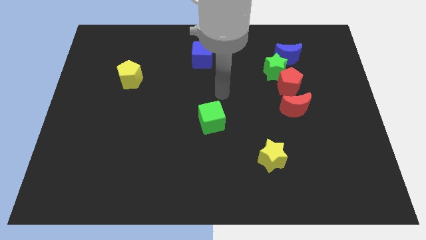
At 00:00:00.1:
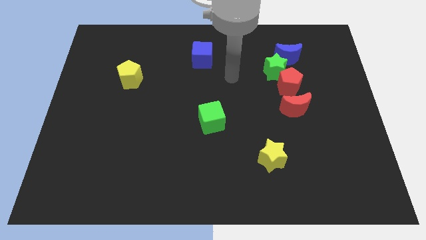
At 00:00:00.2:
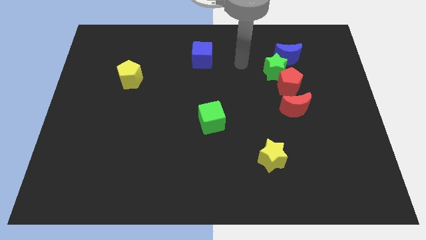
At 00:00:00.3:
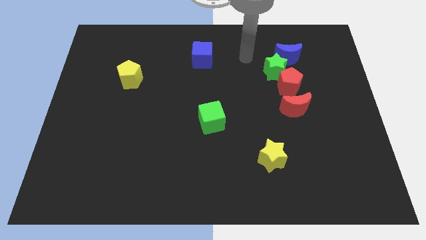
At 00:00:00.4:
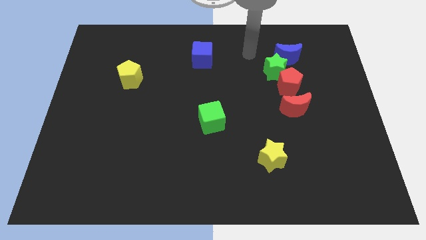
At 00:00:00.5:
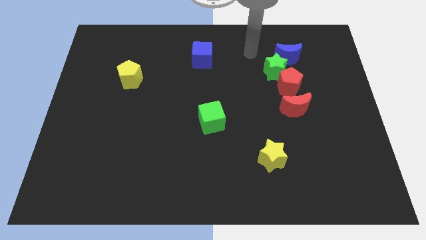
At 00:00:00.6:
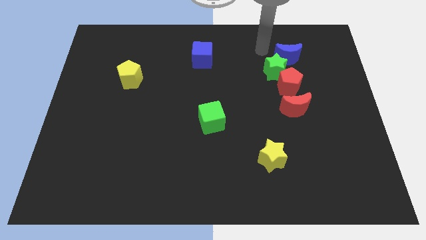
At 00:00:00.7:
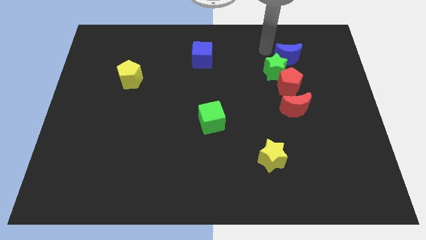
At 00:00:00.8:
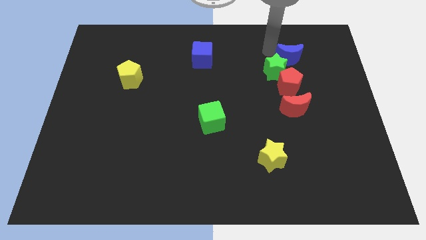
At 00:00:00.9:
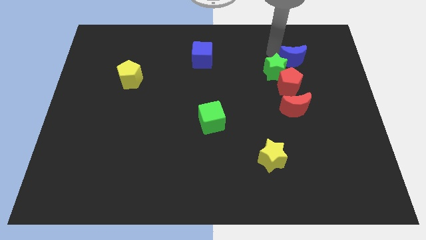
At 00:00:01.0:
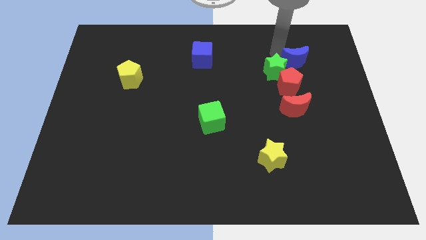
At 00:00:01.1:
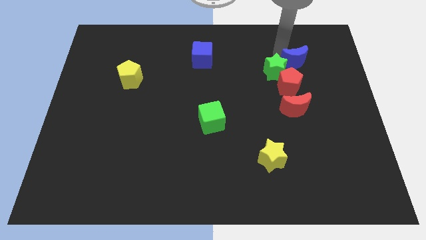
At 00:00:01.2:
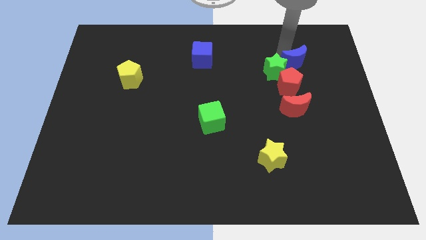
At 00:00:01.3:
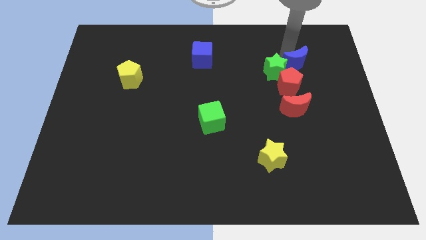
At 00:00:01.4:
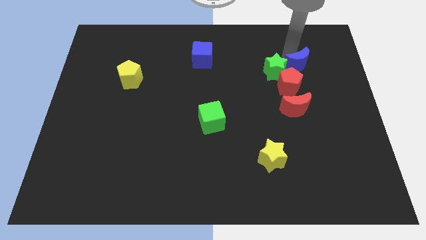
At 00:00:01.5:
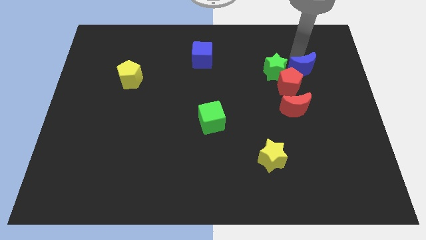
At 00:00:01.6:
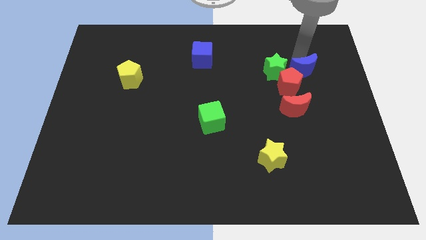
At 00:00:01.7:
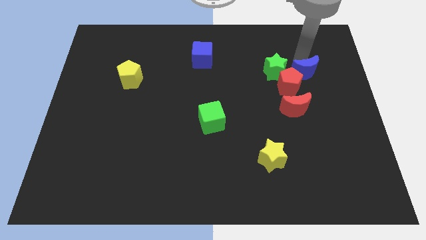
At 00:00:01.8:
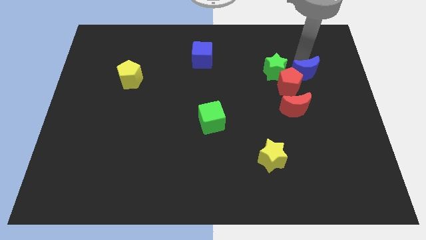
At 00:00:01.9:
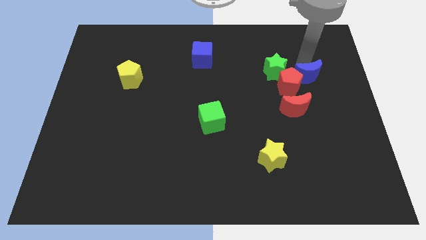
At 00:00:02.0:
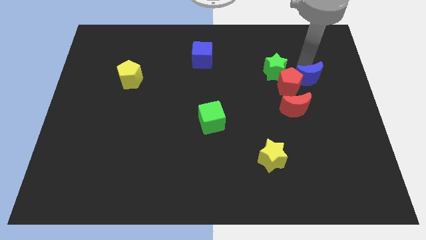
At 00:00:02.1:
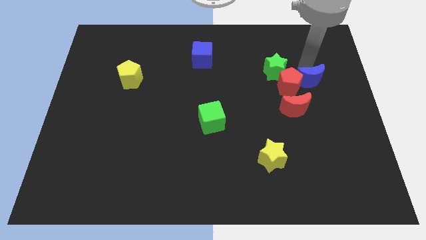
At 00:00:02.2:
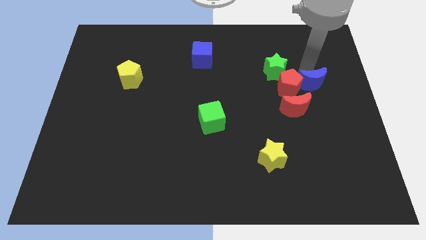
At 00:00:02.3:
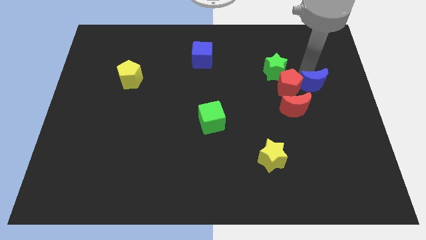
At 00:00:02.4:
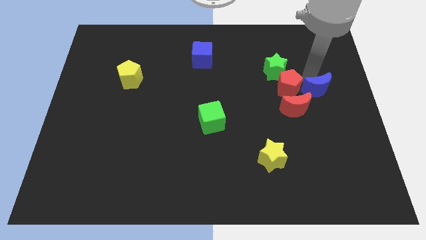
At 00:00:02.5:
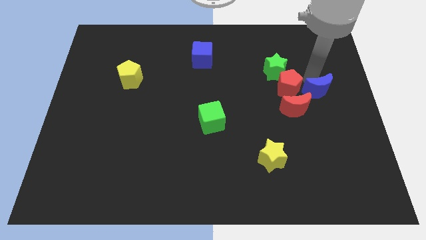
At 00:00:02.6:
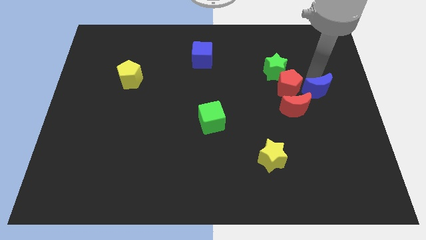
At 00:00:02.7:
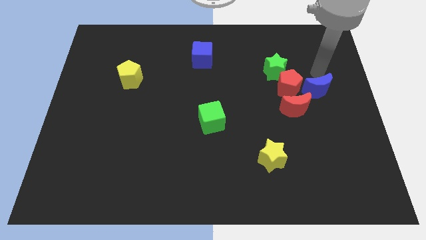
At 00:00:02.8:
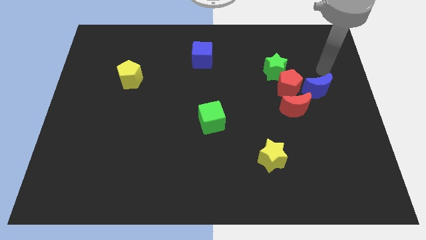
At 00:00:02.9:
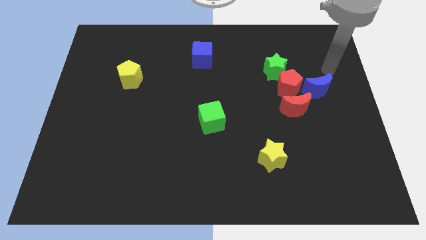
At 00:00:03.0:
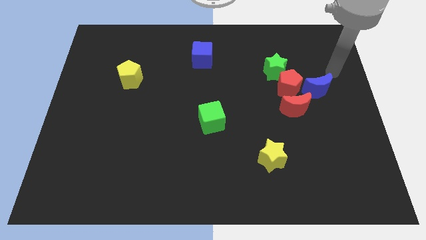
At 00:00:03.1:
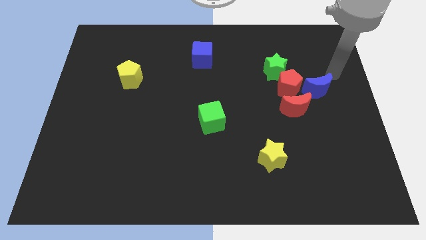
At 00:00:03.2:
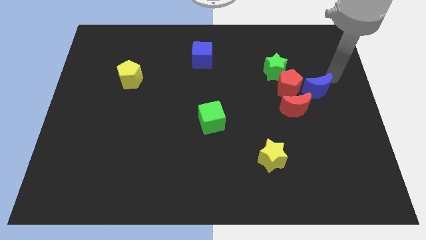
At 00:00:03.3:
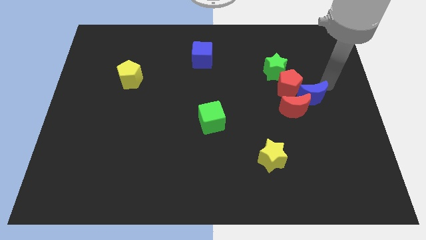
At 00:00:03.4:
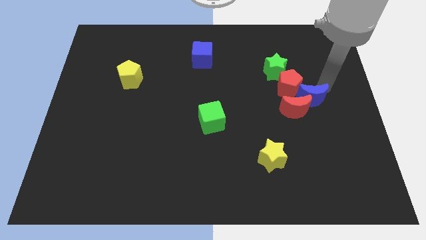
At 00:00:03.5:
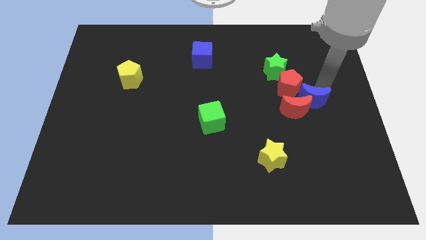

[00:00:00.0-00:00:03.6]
put the blue moon to the red moon

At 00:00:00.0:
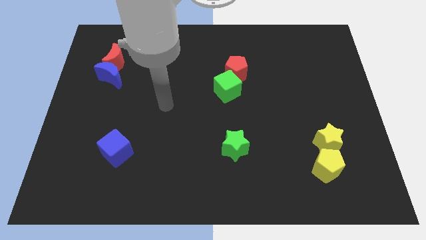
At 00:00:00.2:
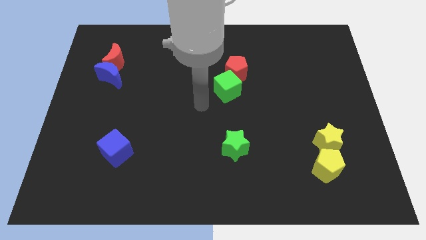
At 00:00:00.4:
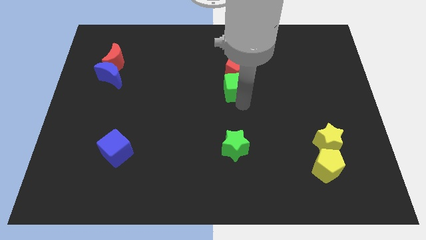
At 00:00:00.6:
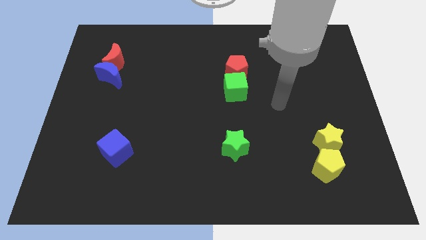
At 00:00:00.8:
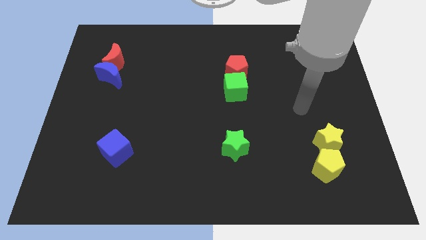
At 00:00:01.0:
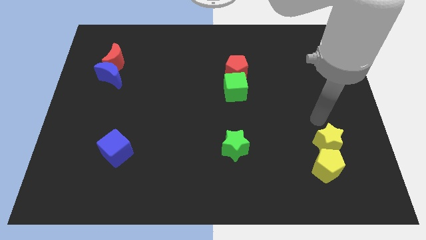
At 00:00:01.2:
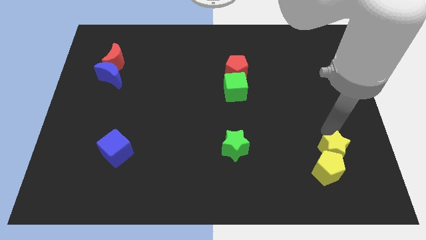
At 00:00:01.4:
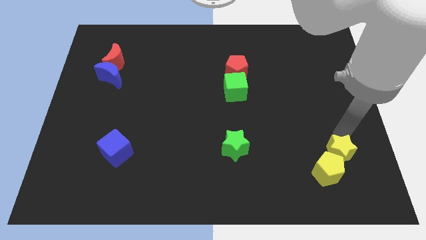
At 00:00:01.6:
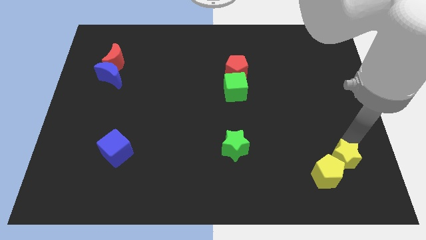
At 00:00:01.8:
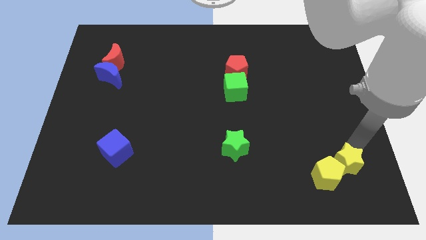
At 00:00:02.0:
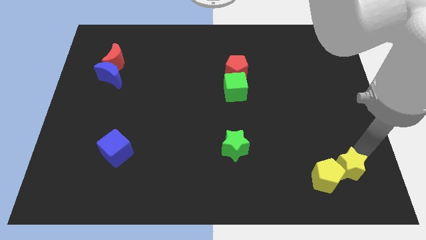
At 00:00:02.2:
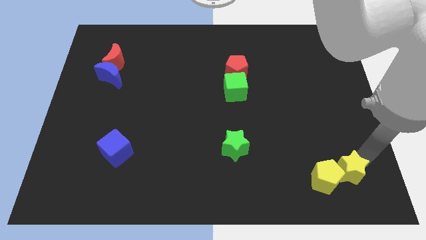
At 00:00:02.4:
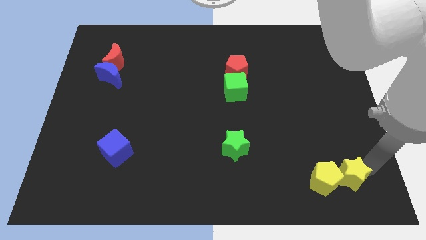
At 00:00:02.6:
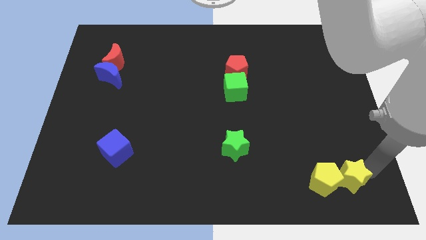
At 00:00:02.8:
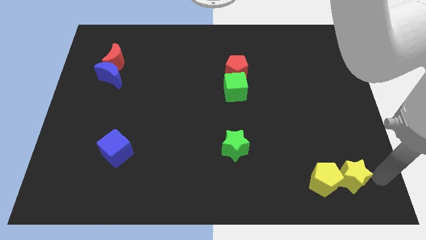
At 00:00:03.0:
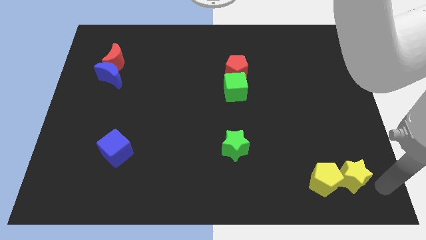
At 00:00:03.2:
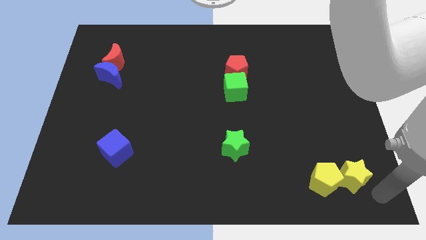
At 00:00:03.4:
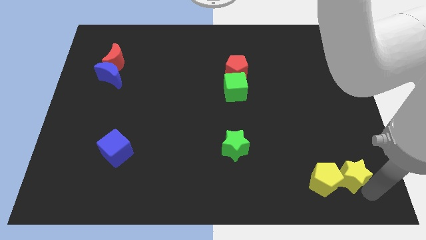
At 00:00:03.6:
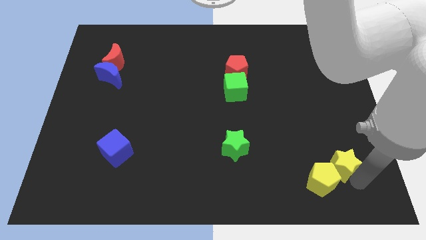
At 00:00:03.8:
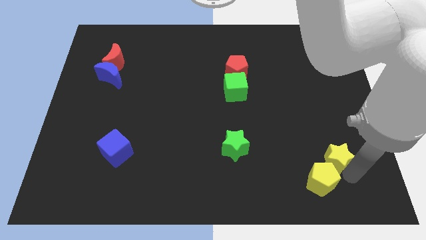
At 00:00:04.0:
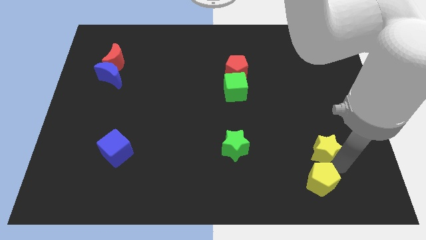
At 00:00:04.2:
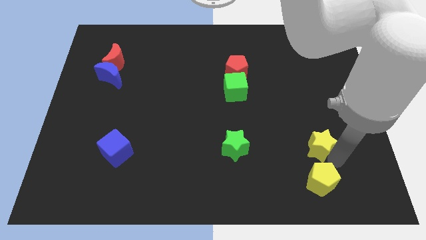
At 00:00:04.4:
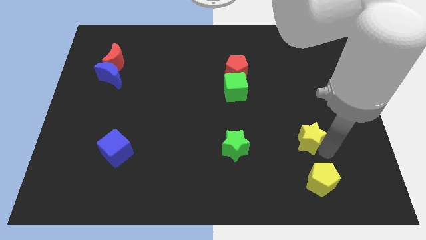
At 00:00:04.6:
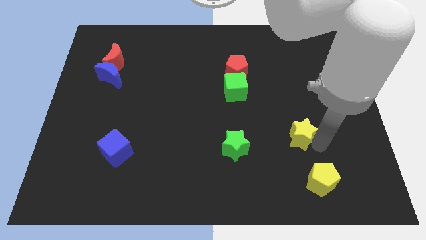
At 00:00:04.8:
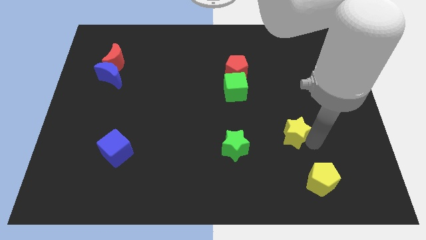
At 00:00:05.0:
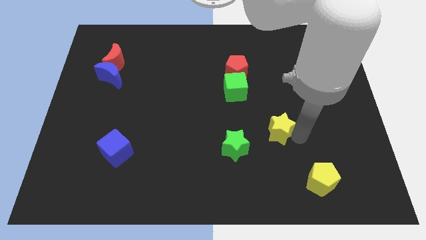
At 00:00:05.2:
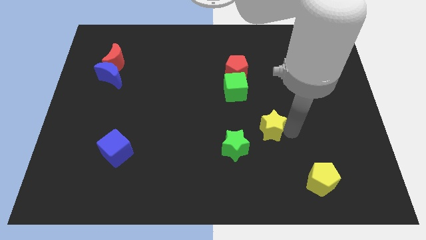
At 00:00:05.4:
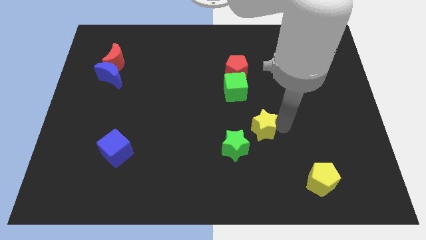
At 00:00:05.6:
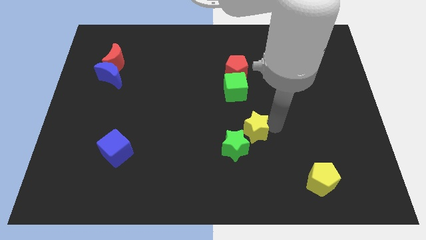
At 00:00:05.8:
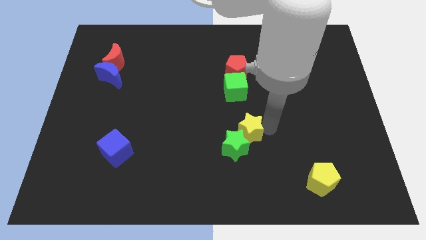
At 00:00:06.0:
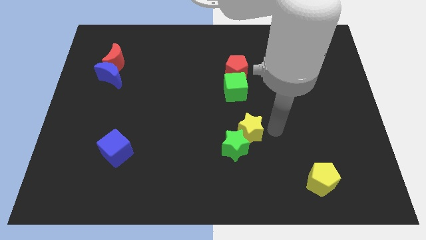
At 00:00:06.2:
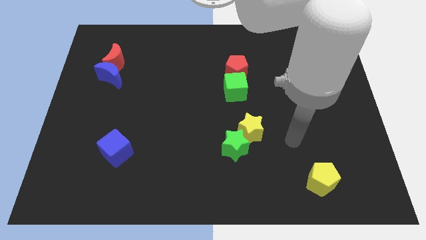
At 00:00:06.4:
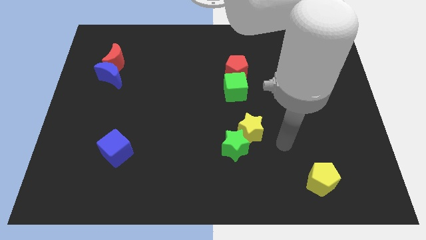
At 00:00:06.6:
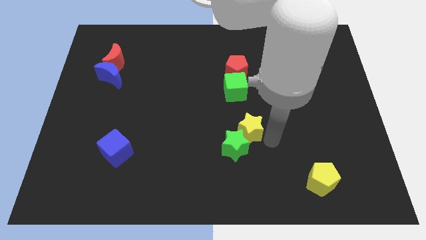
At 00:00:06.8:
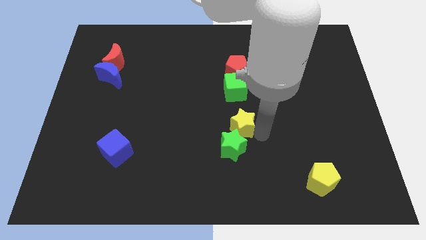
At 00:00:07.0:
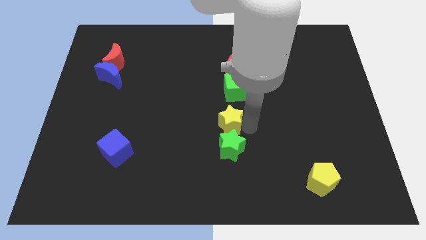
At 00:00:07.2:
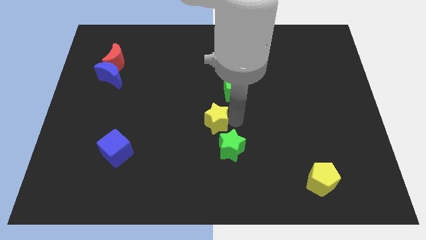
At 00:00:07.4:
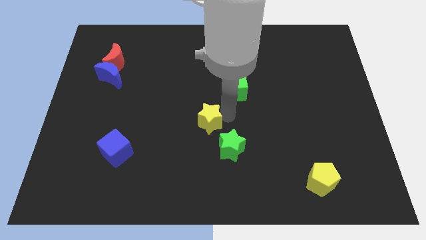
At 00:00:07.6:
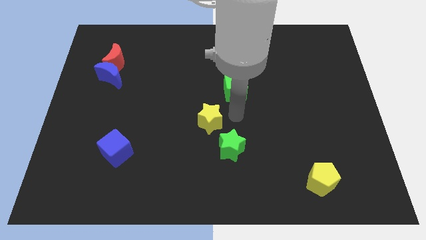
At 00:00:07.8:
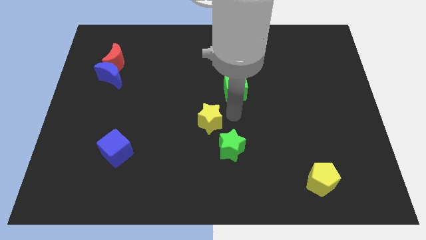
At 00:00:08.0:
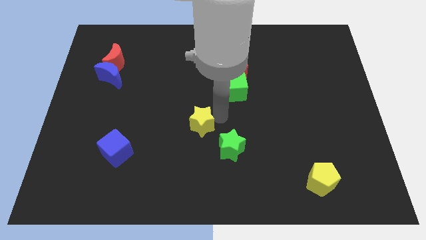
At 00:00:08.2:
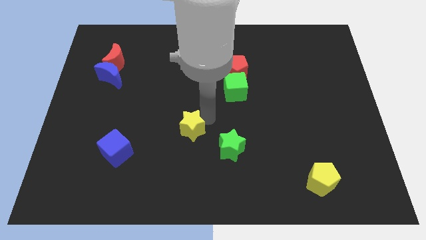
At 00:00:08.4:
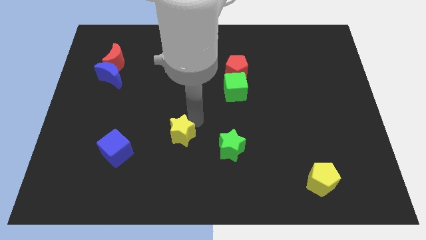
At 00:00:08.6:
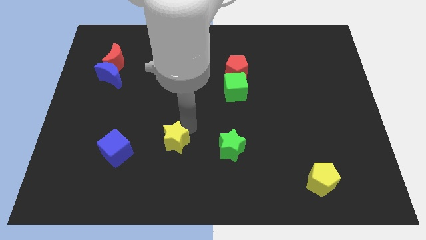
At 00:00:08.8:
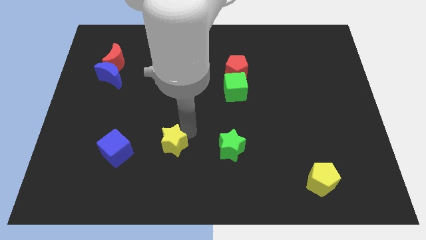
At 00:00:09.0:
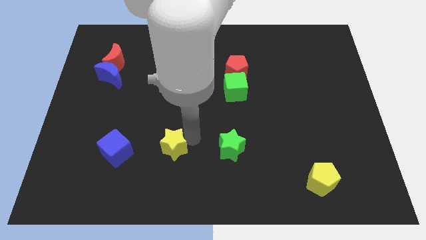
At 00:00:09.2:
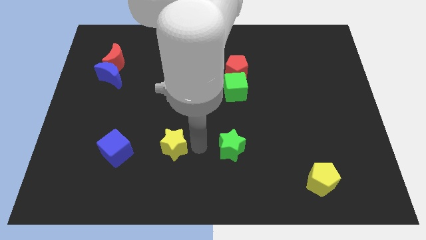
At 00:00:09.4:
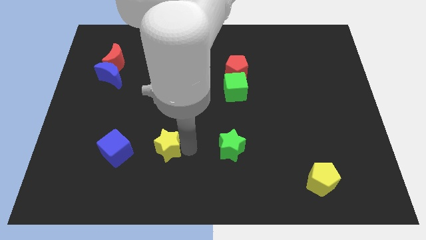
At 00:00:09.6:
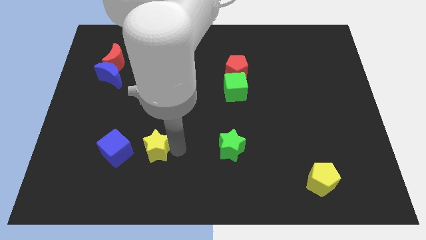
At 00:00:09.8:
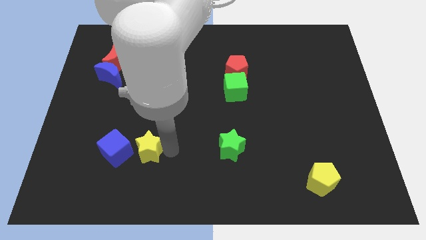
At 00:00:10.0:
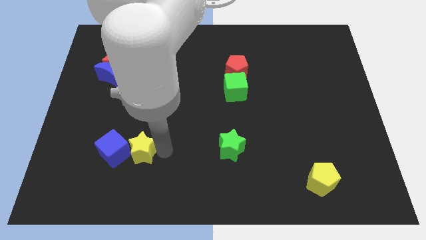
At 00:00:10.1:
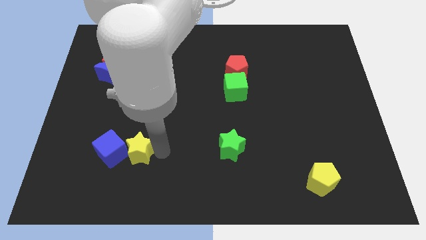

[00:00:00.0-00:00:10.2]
slide the yellow star to the blue cube
